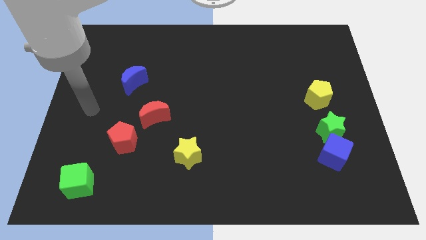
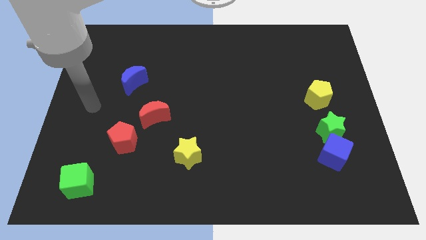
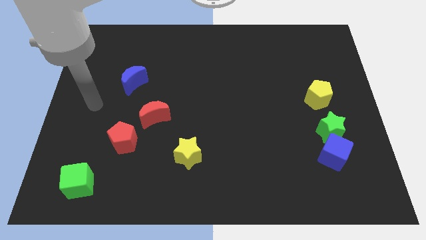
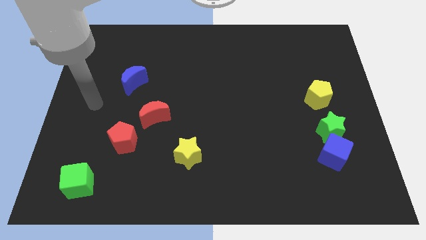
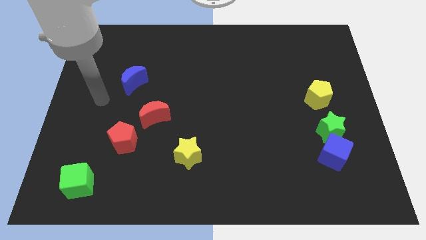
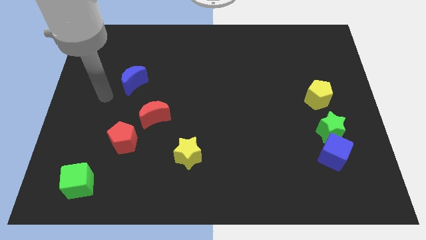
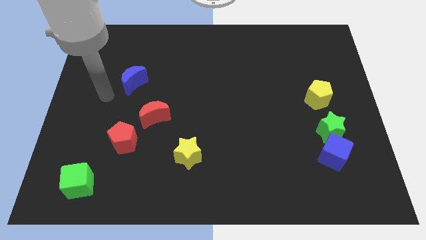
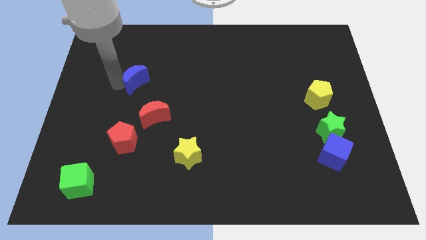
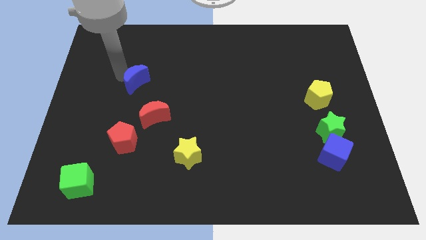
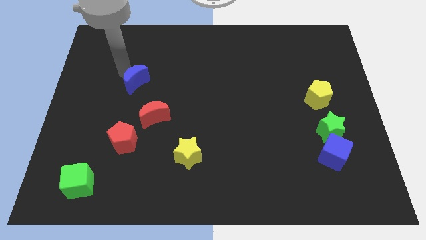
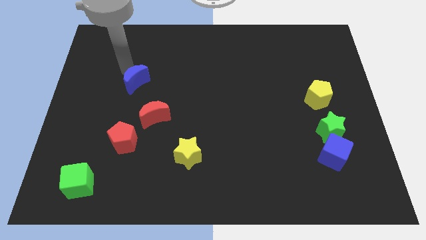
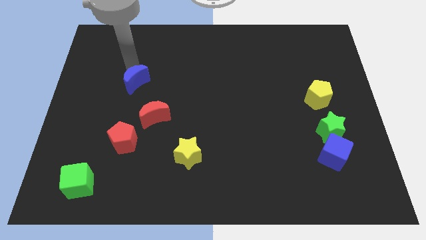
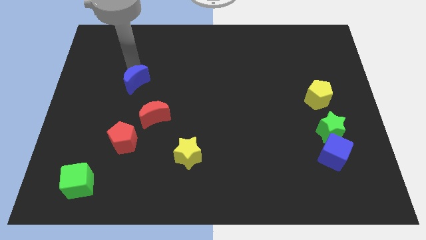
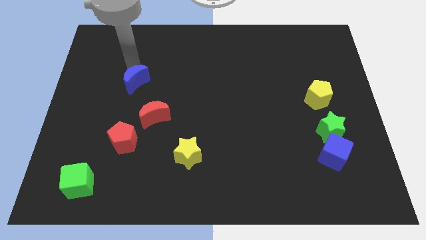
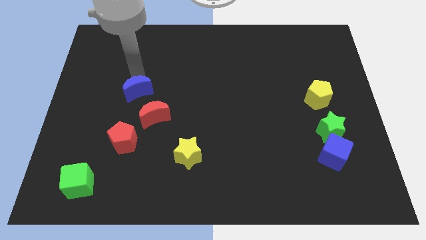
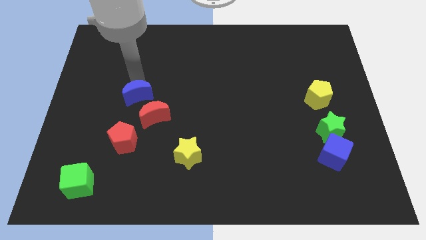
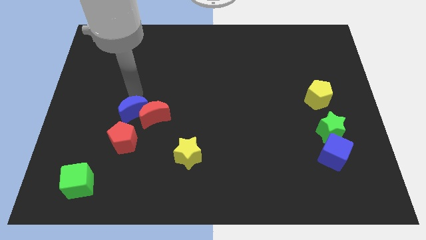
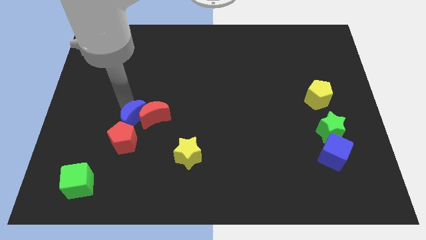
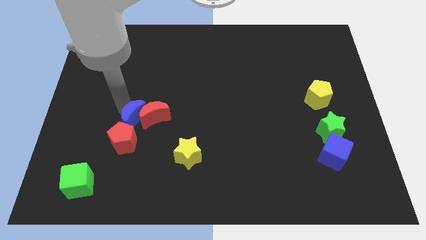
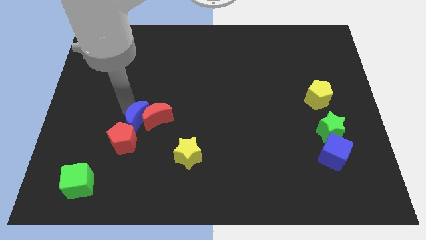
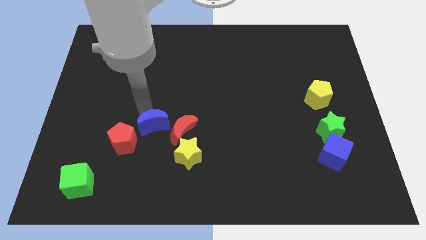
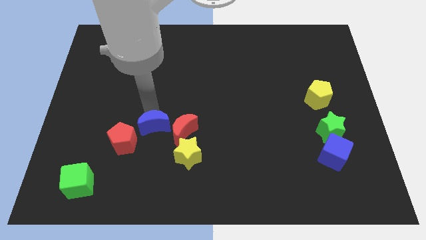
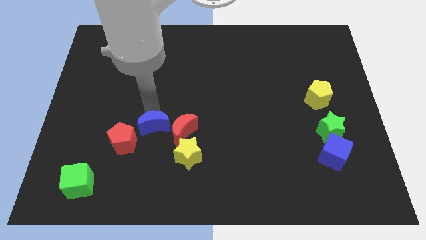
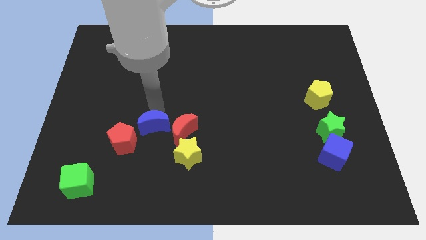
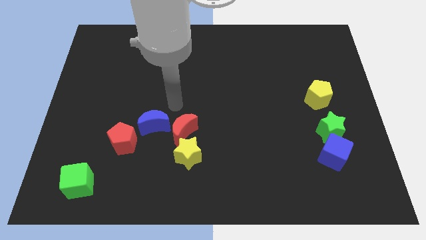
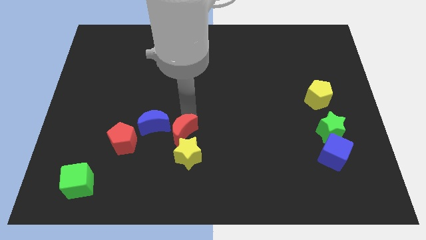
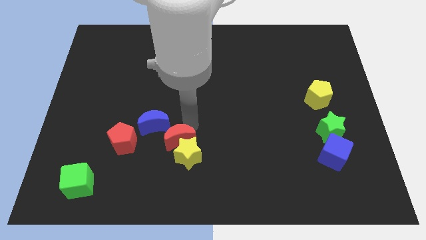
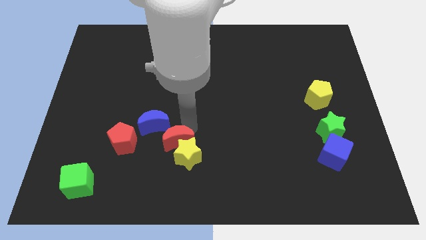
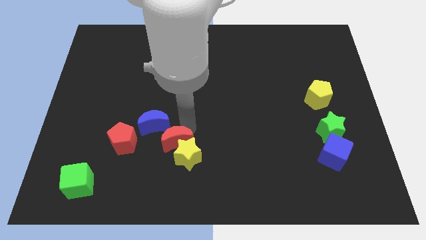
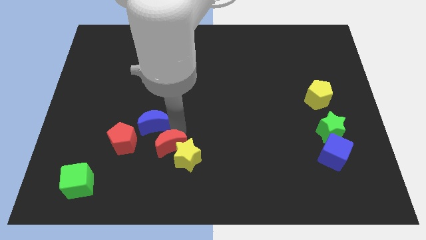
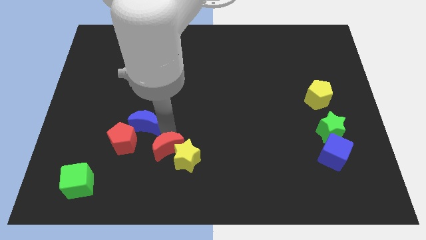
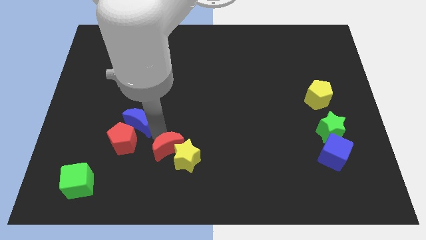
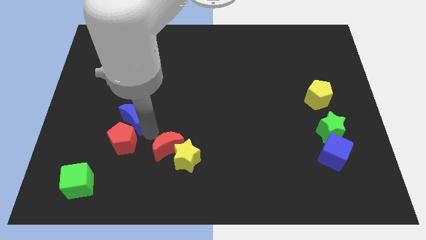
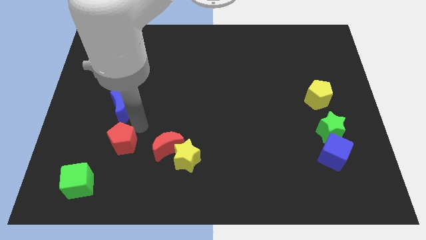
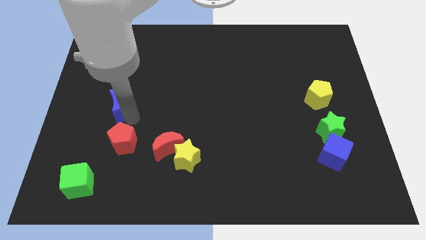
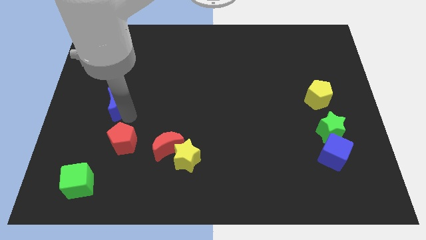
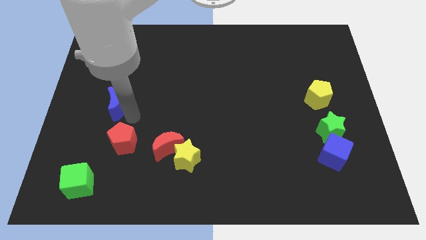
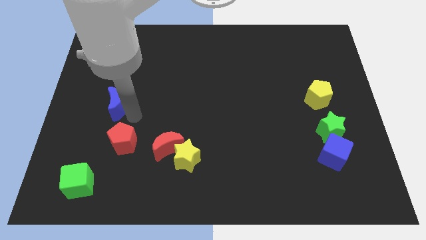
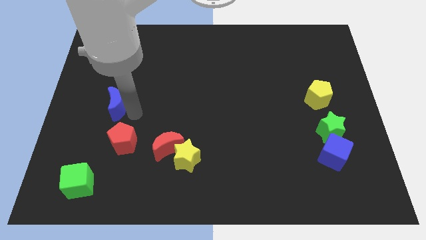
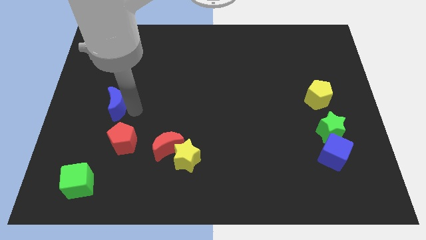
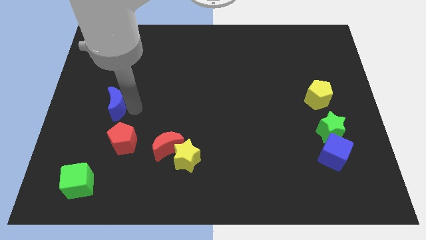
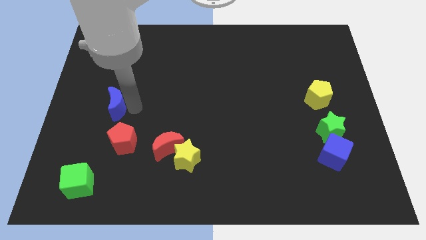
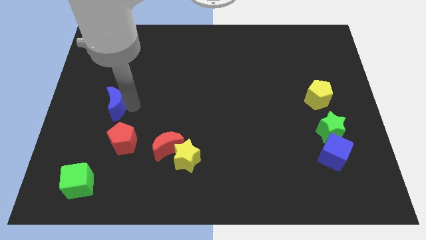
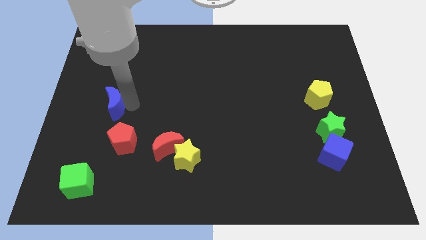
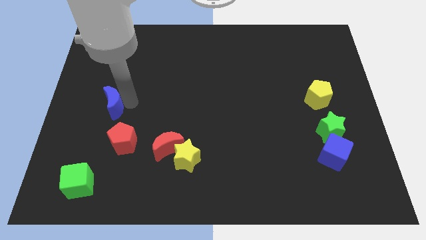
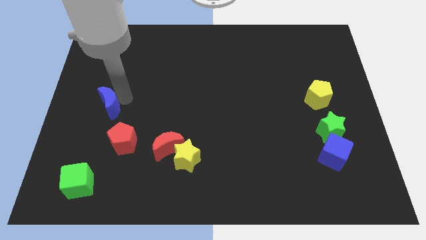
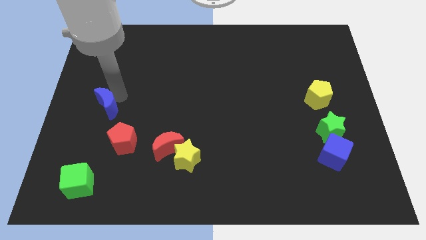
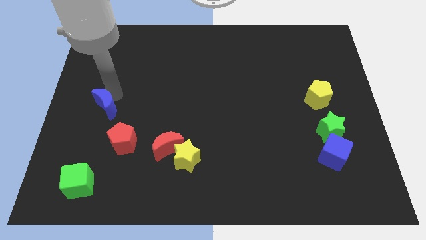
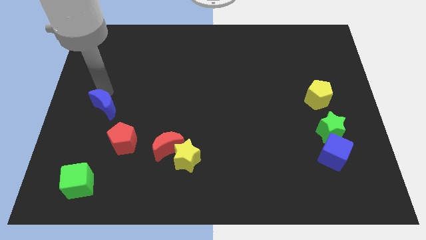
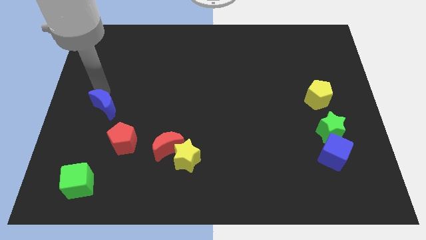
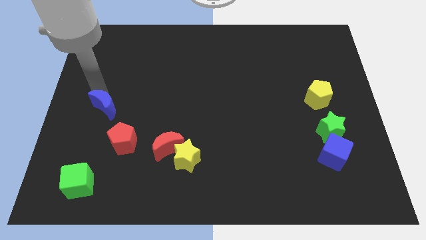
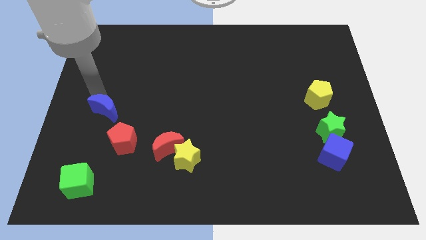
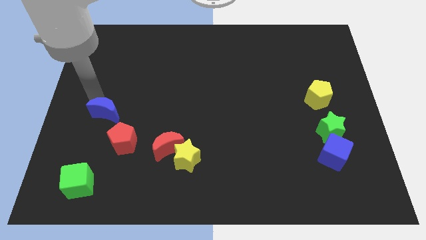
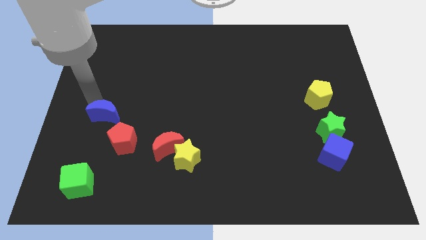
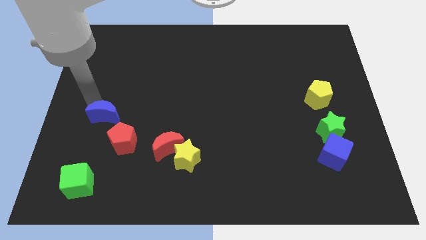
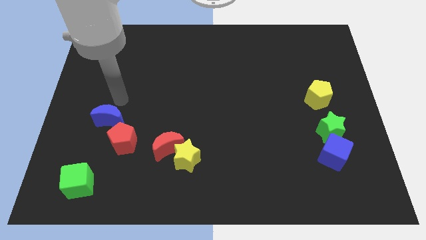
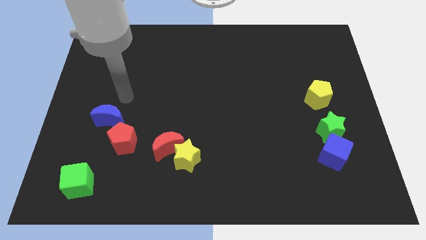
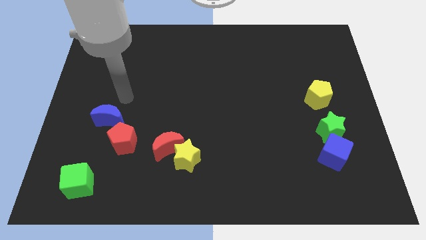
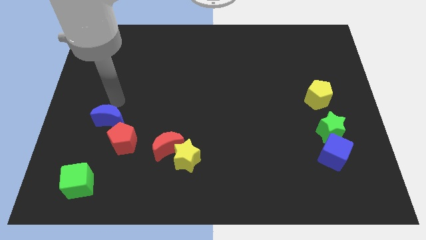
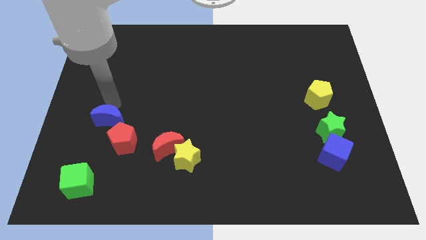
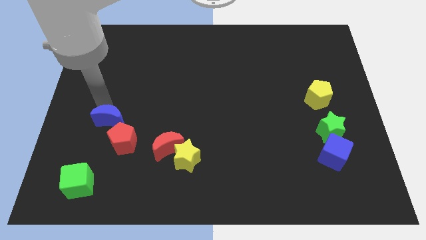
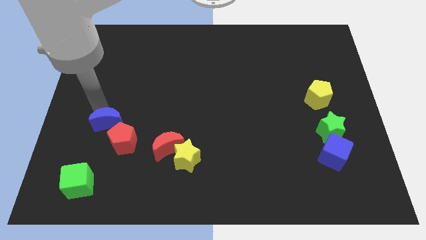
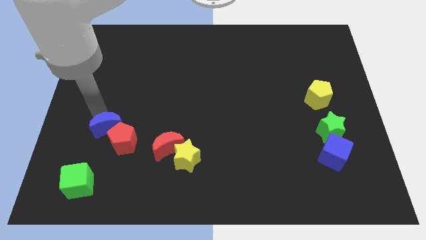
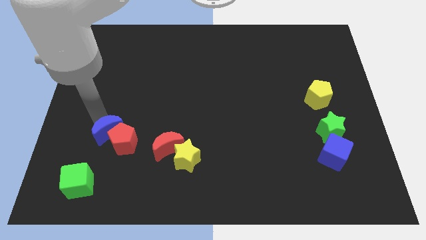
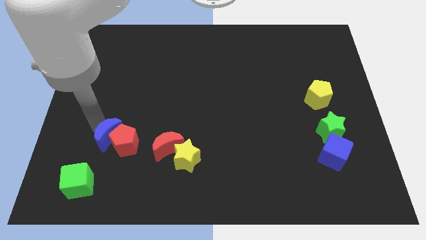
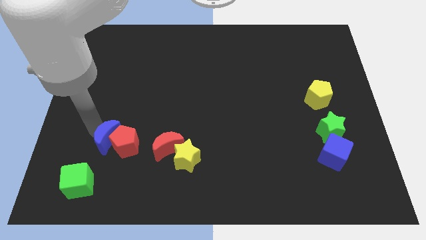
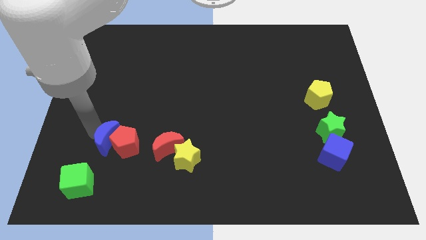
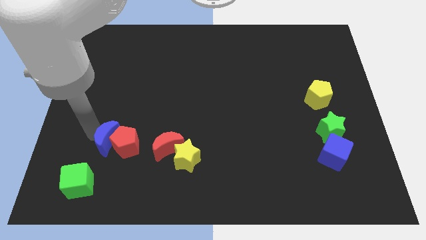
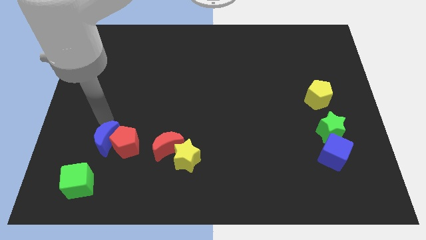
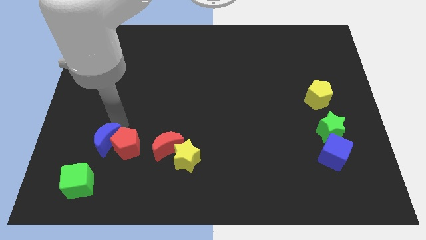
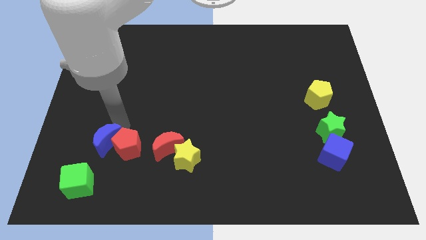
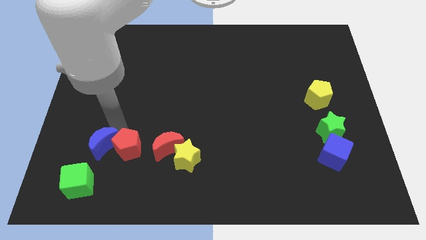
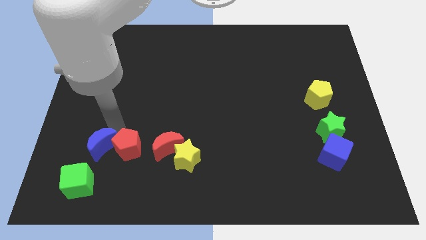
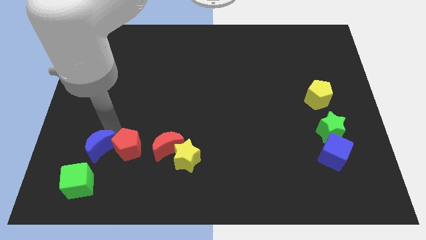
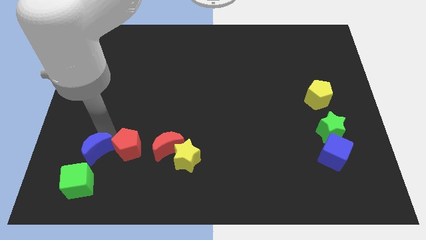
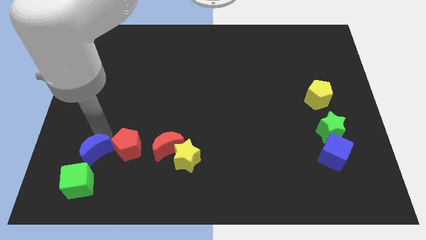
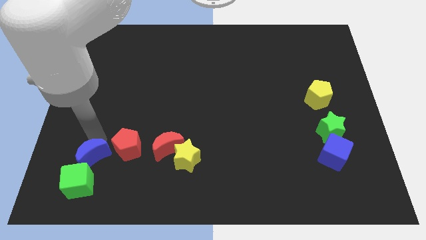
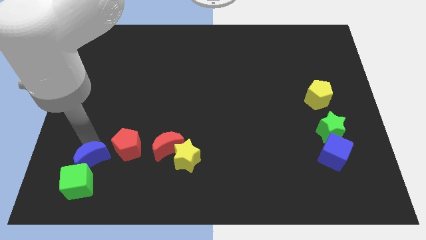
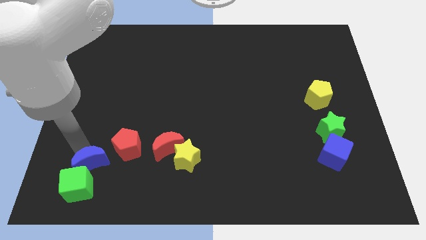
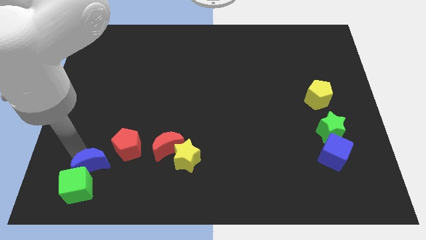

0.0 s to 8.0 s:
move the blue moon close to the green cube

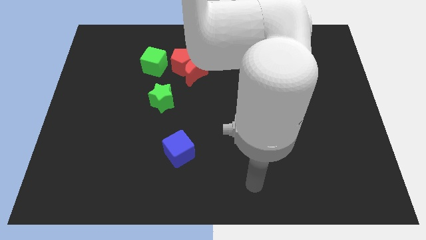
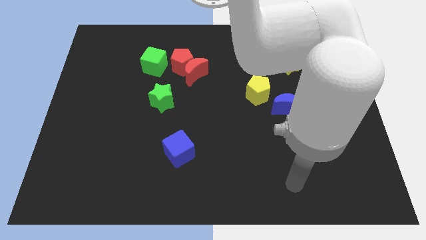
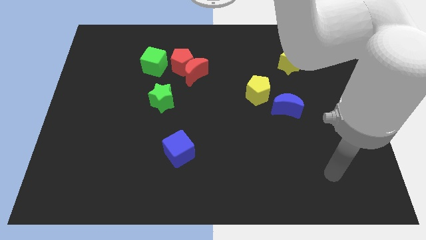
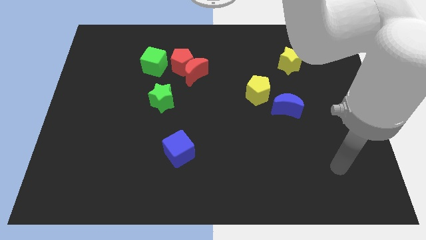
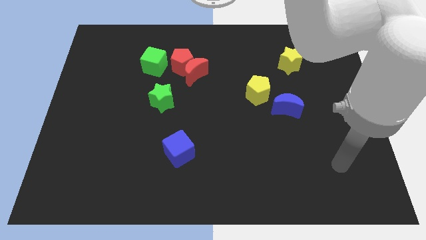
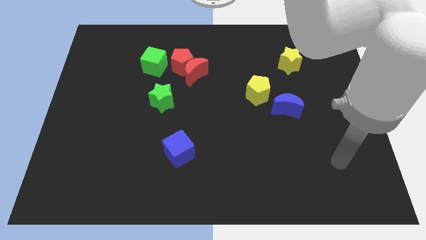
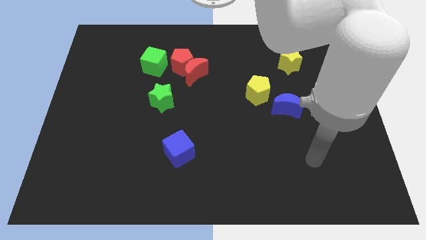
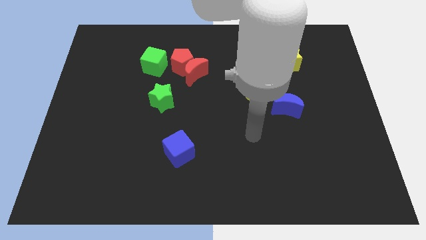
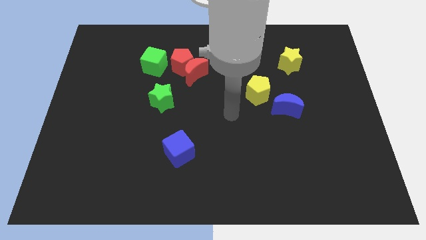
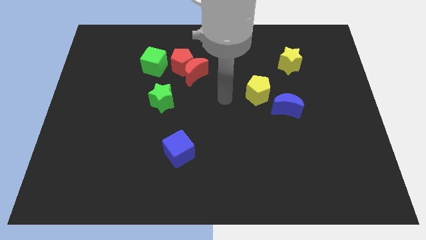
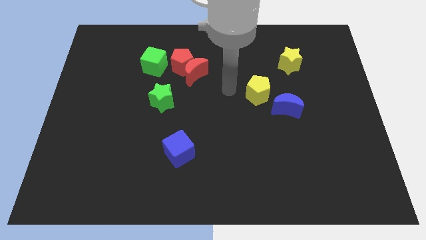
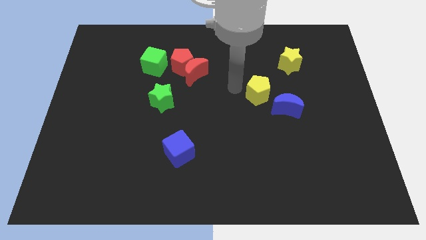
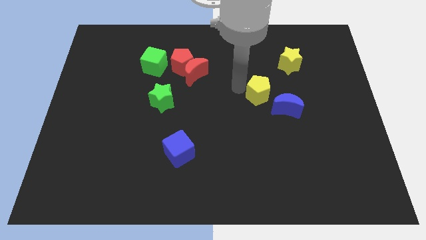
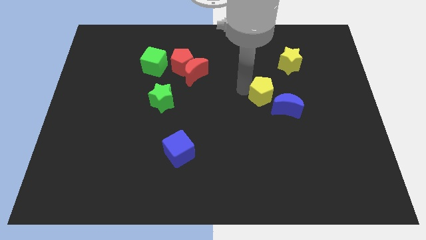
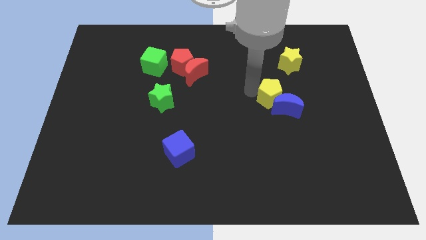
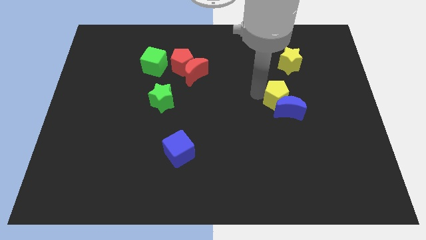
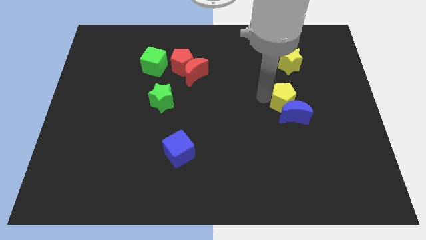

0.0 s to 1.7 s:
slide the yellow pentagon next to the blue moon
